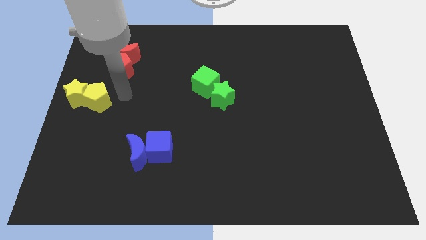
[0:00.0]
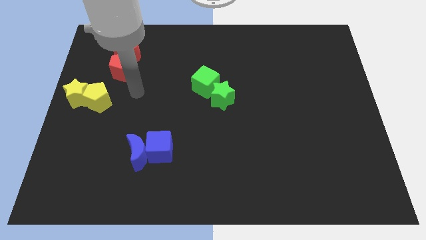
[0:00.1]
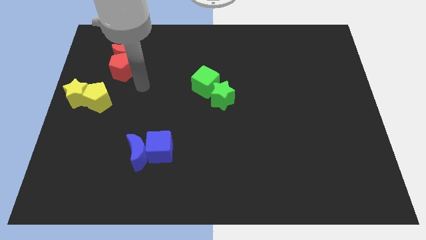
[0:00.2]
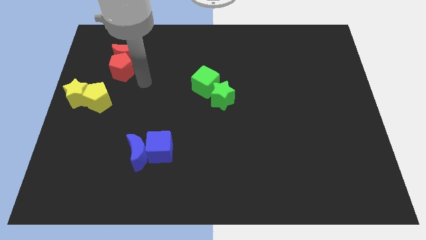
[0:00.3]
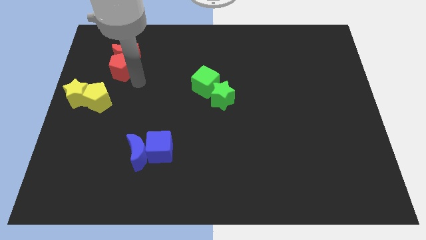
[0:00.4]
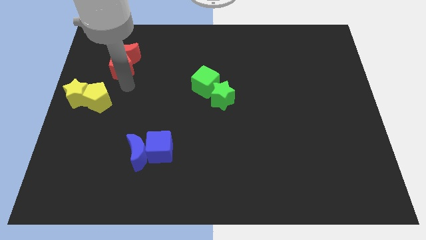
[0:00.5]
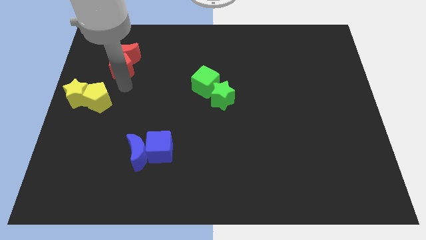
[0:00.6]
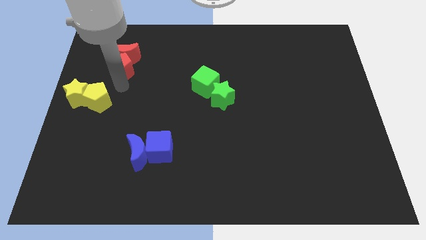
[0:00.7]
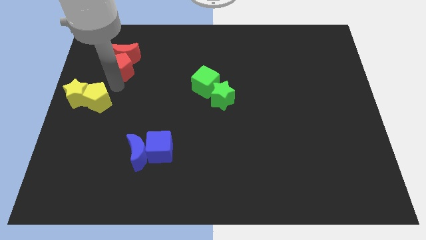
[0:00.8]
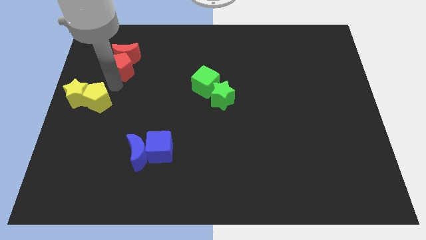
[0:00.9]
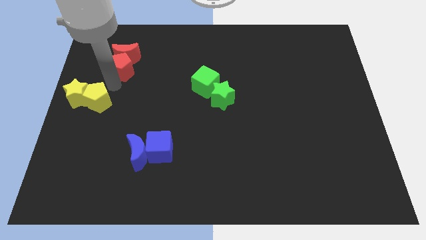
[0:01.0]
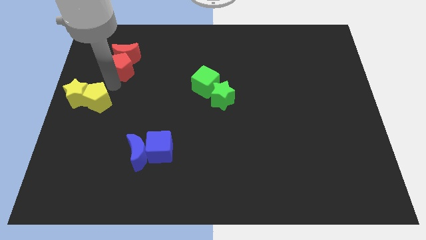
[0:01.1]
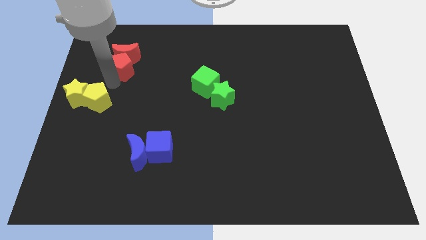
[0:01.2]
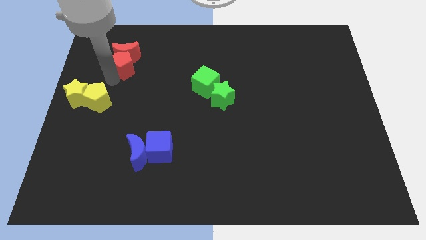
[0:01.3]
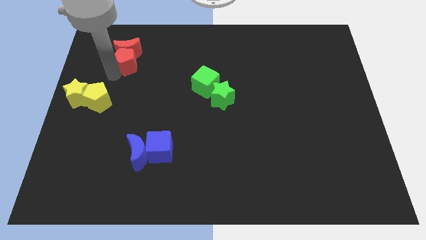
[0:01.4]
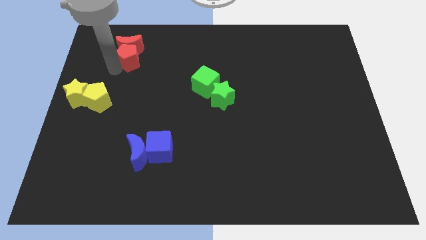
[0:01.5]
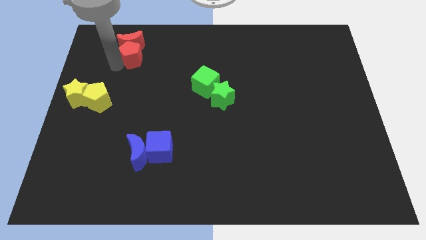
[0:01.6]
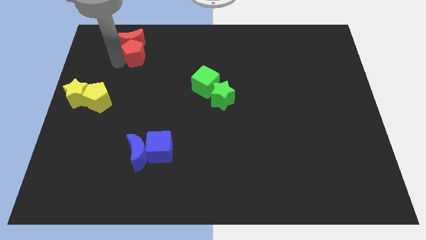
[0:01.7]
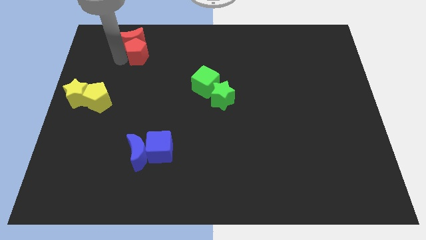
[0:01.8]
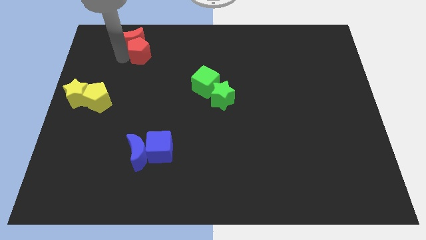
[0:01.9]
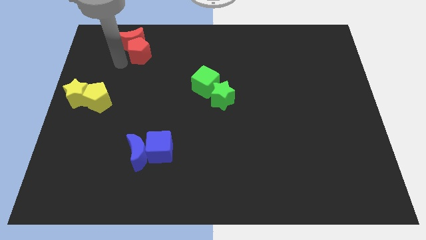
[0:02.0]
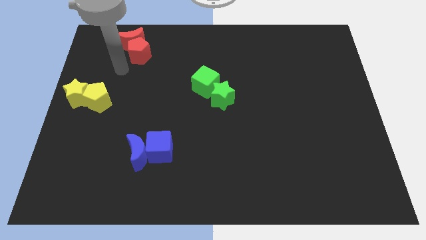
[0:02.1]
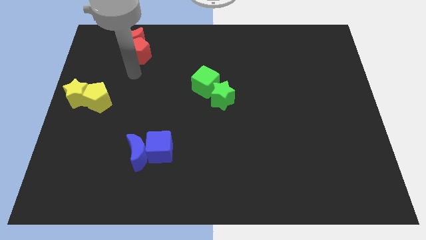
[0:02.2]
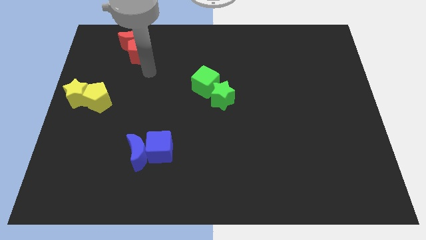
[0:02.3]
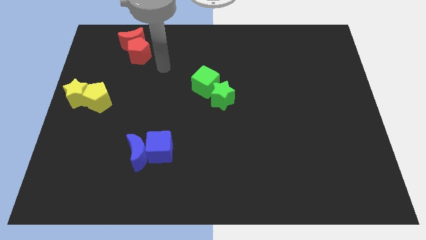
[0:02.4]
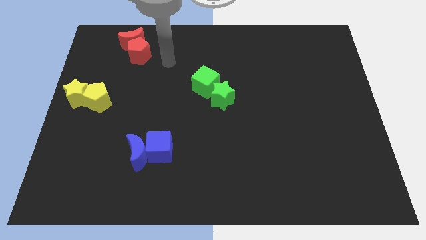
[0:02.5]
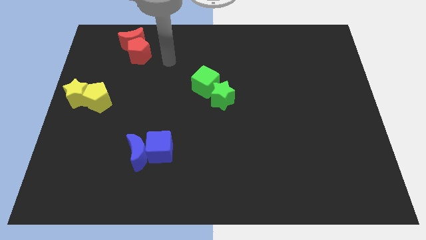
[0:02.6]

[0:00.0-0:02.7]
move the red blocks to the top of the board

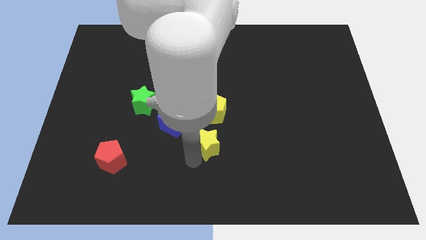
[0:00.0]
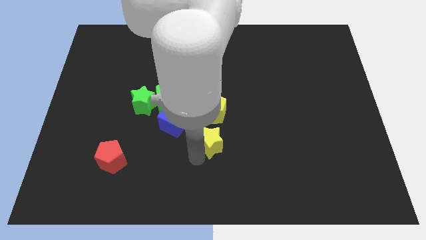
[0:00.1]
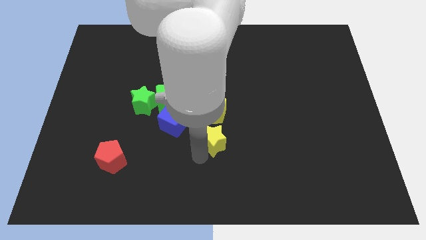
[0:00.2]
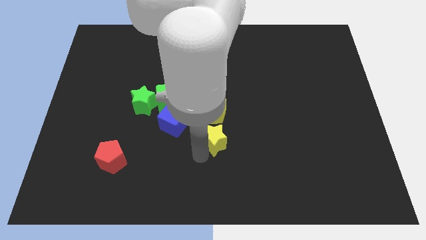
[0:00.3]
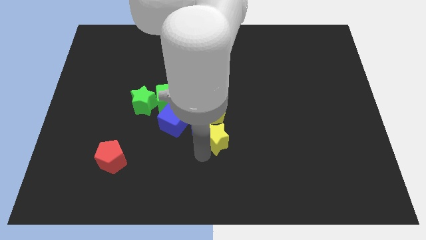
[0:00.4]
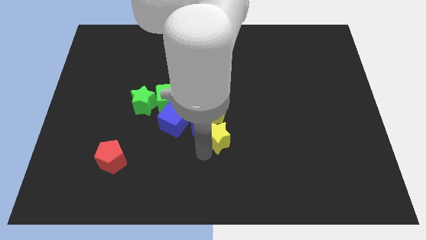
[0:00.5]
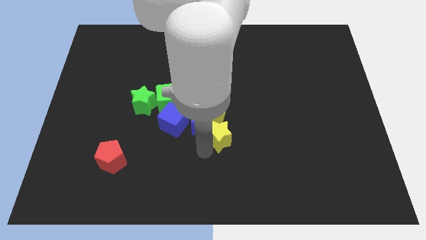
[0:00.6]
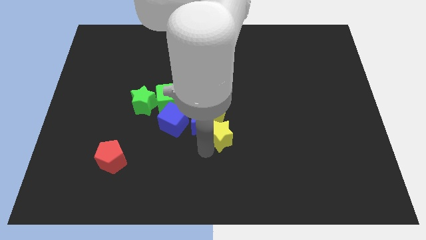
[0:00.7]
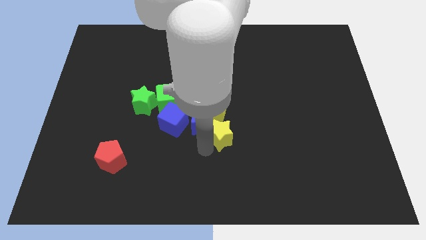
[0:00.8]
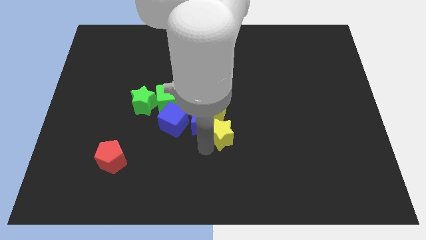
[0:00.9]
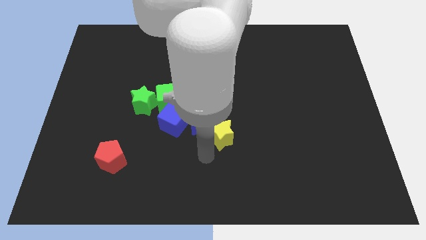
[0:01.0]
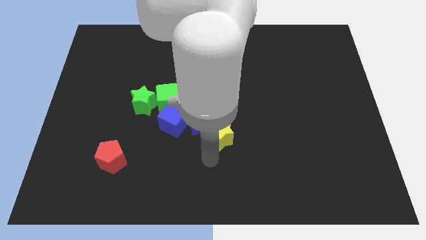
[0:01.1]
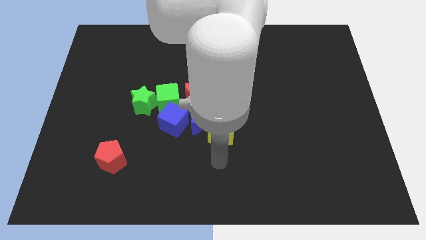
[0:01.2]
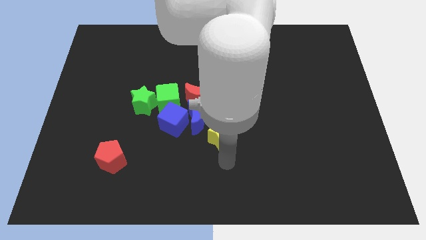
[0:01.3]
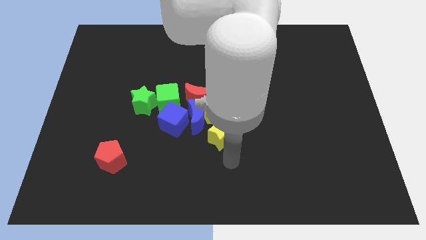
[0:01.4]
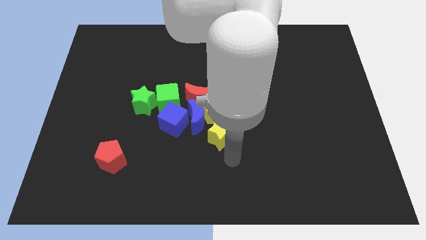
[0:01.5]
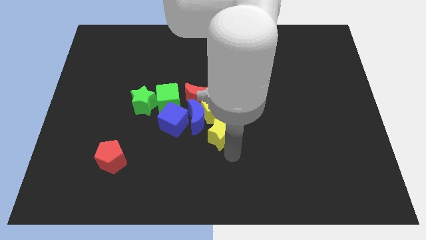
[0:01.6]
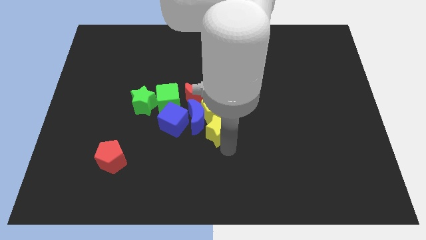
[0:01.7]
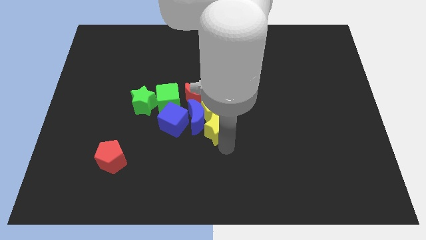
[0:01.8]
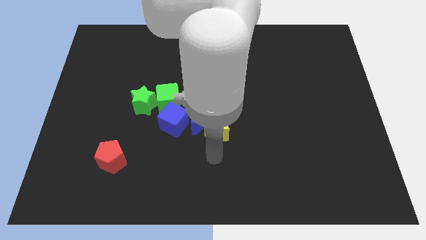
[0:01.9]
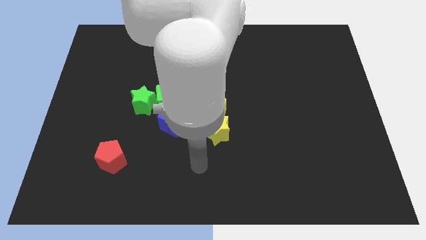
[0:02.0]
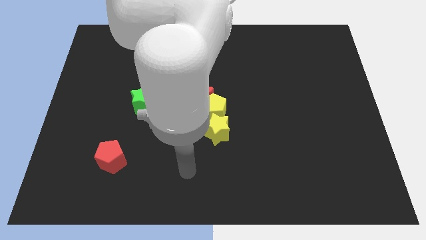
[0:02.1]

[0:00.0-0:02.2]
place yellow star below yellow pentagon

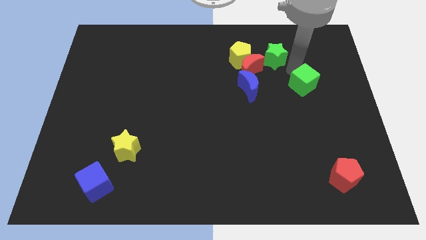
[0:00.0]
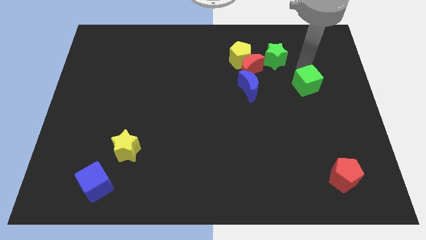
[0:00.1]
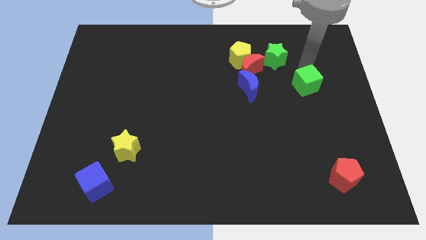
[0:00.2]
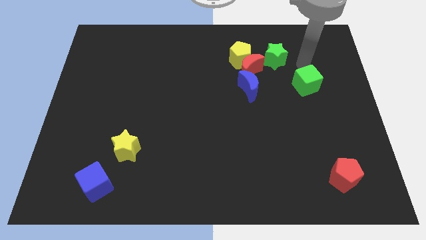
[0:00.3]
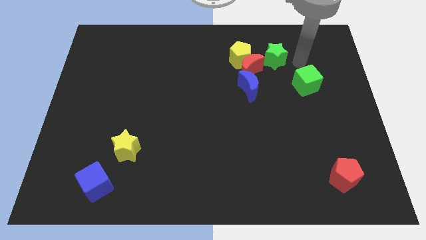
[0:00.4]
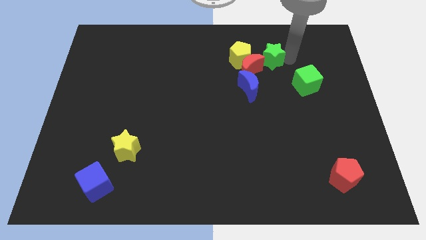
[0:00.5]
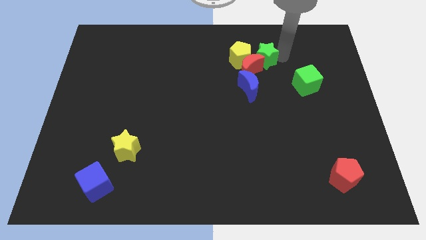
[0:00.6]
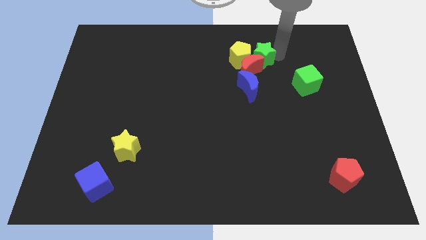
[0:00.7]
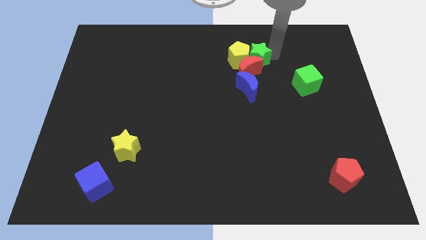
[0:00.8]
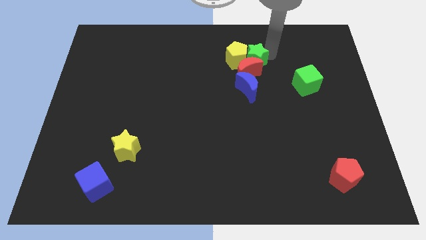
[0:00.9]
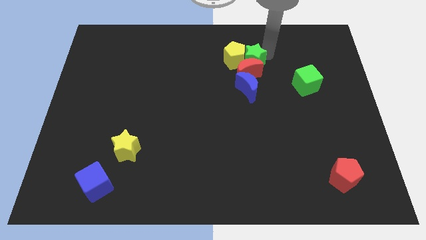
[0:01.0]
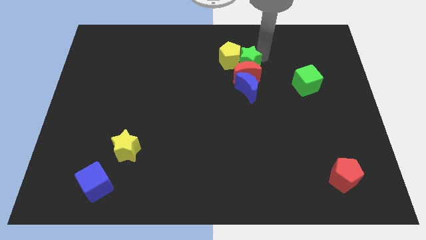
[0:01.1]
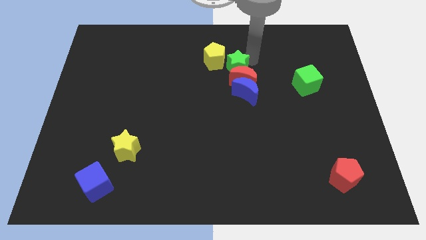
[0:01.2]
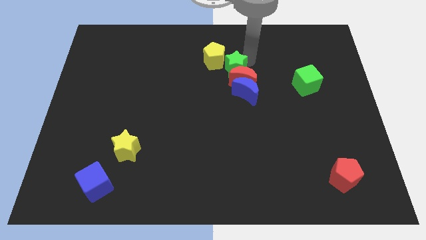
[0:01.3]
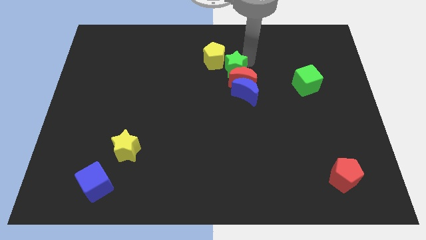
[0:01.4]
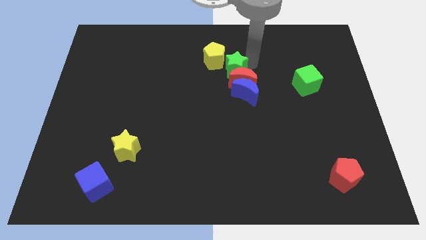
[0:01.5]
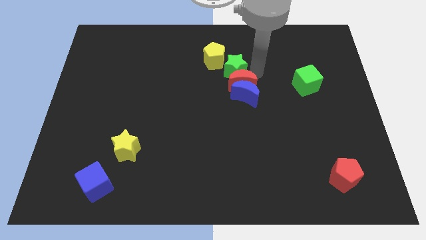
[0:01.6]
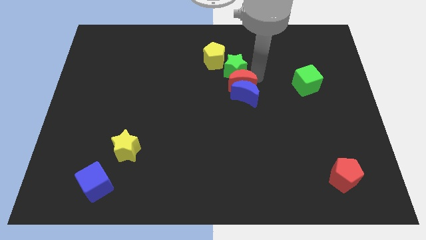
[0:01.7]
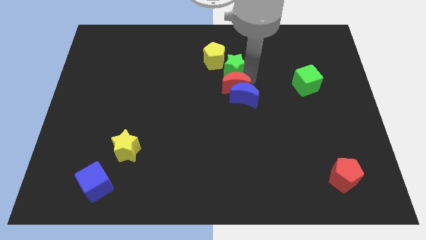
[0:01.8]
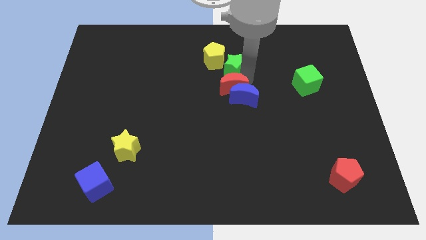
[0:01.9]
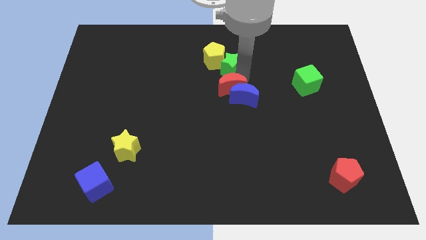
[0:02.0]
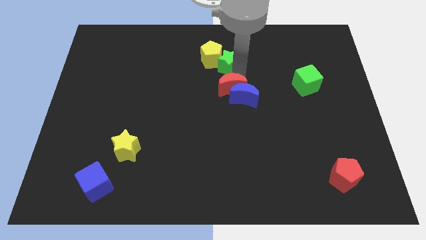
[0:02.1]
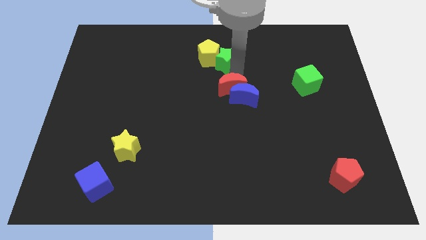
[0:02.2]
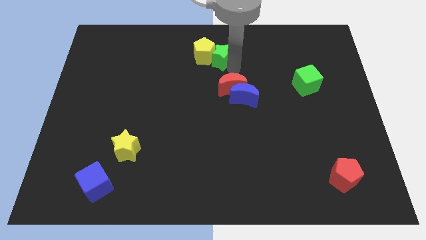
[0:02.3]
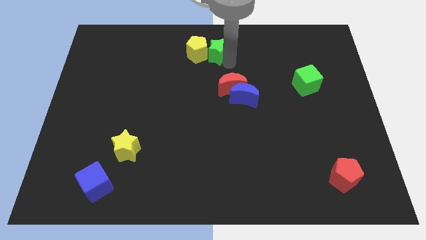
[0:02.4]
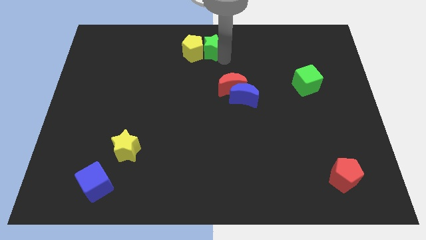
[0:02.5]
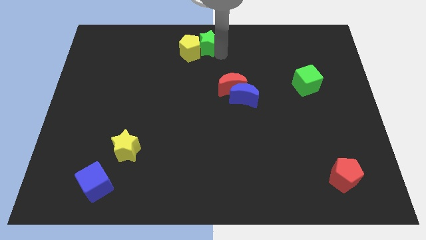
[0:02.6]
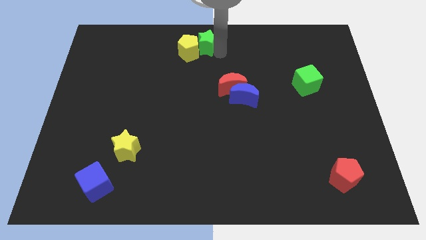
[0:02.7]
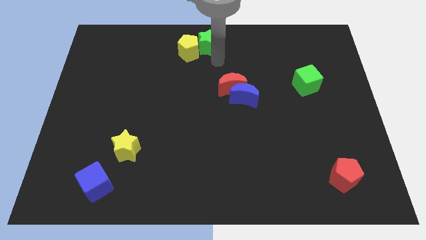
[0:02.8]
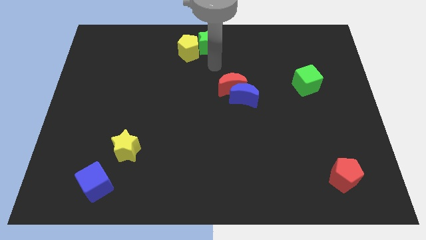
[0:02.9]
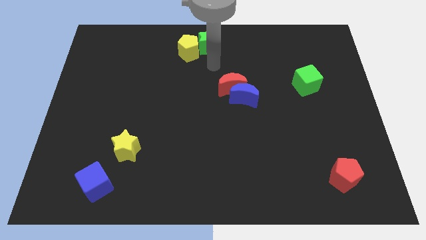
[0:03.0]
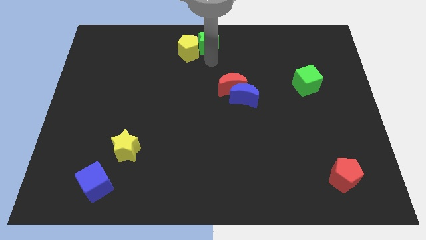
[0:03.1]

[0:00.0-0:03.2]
move the green star and the yellow pentagon to the left

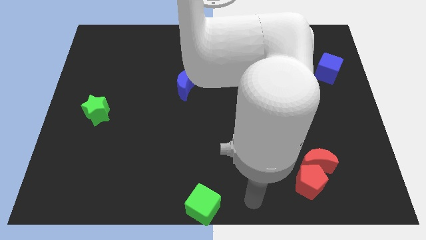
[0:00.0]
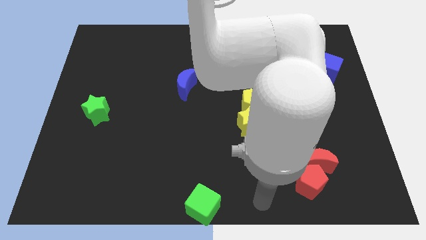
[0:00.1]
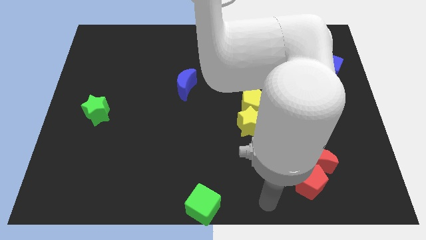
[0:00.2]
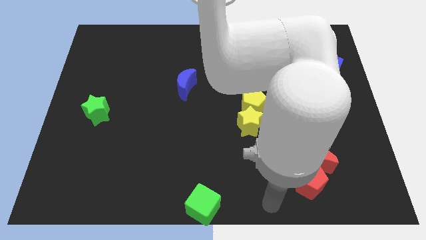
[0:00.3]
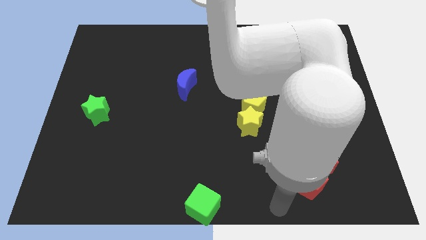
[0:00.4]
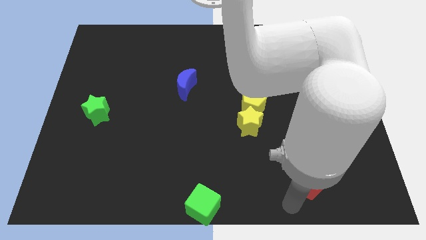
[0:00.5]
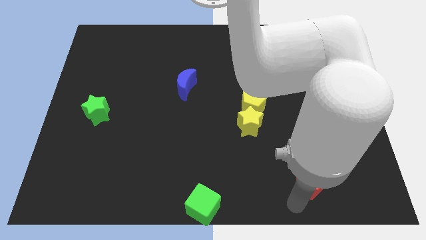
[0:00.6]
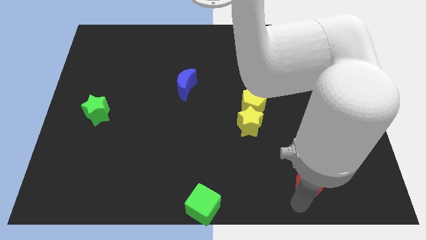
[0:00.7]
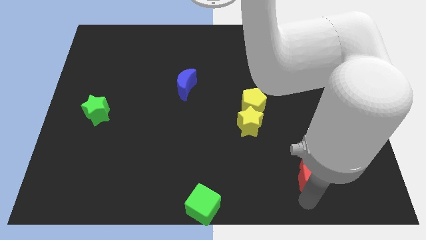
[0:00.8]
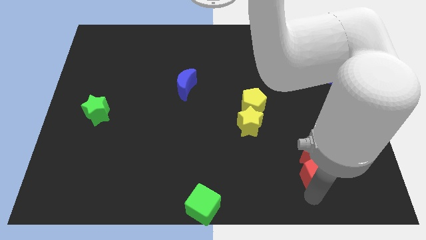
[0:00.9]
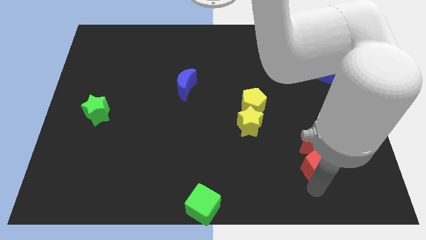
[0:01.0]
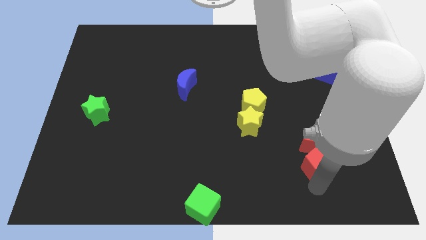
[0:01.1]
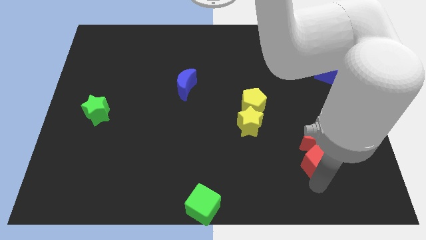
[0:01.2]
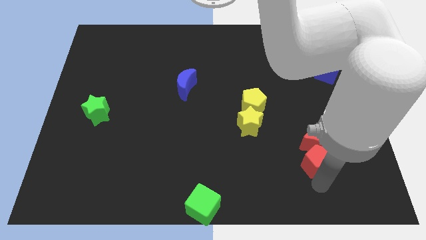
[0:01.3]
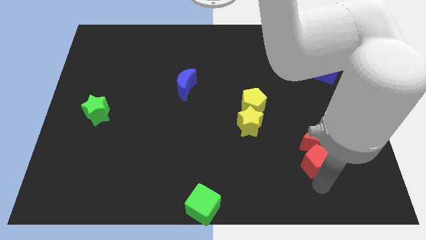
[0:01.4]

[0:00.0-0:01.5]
push the red pentagon along the red crescent slightly towards top side of the board
